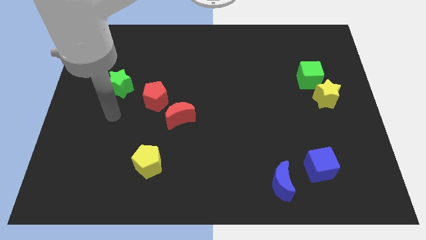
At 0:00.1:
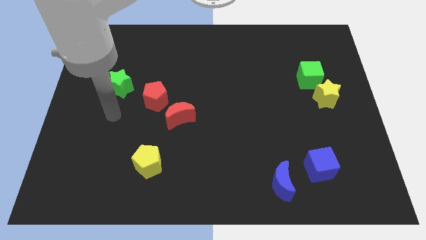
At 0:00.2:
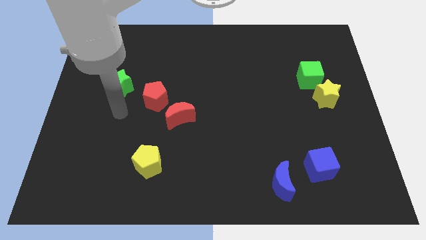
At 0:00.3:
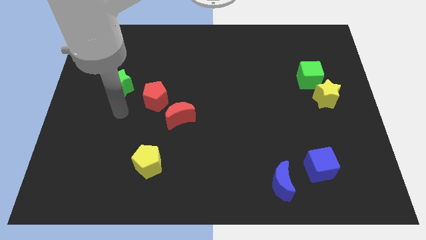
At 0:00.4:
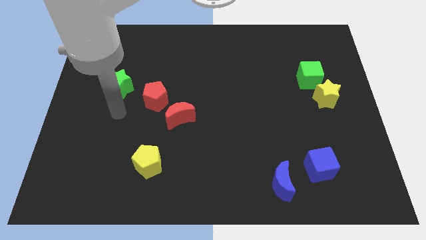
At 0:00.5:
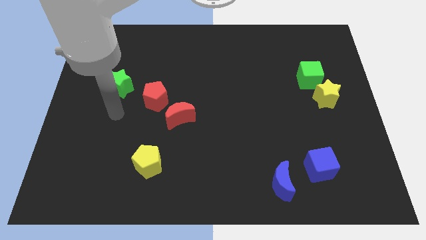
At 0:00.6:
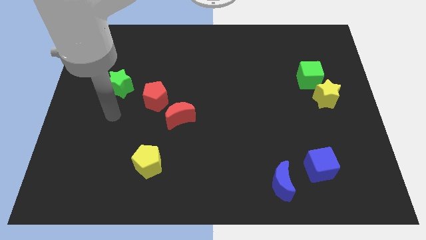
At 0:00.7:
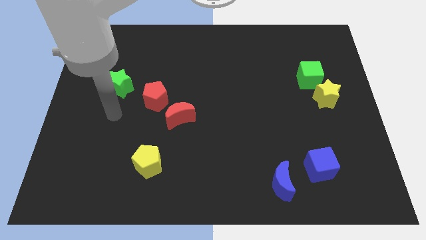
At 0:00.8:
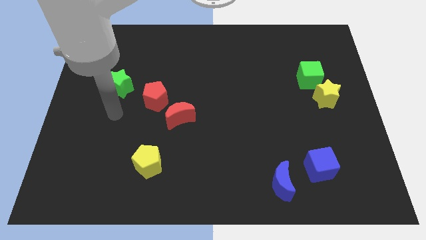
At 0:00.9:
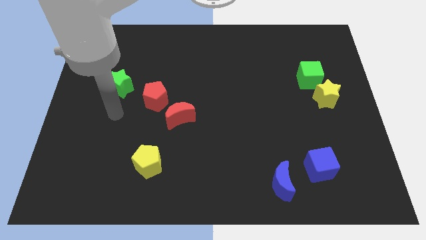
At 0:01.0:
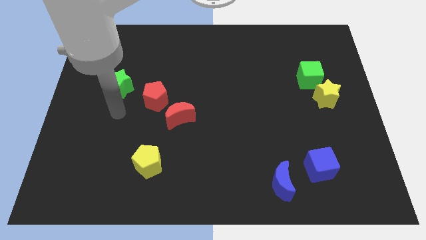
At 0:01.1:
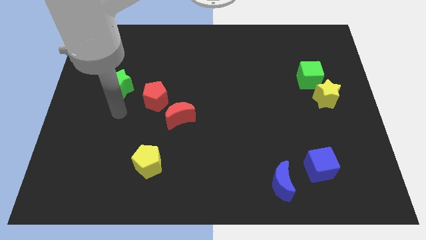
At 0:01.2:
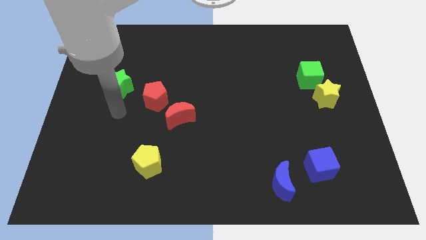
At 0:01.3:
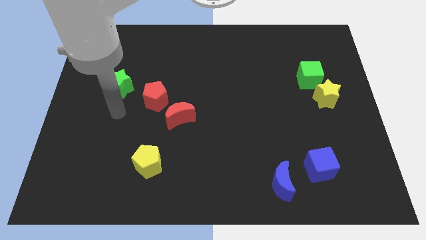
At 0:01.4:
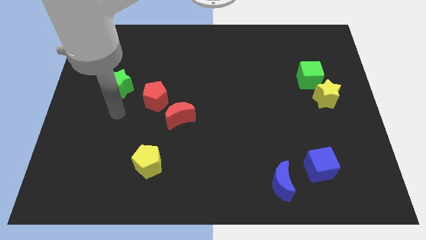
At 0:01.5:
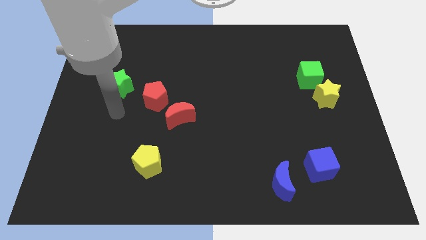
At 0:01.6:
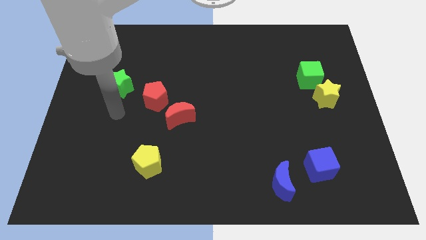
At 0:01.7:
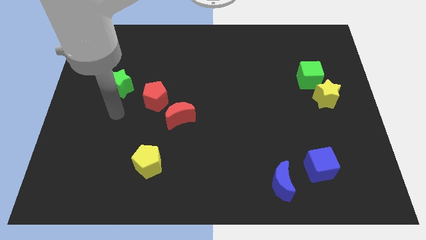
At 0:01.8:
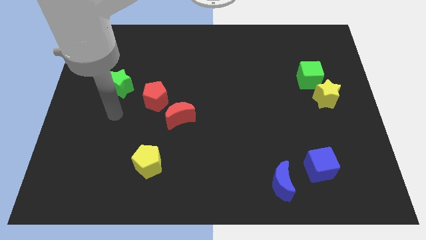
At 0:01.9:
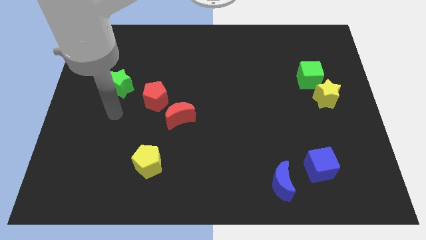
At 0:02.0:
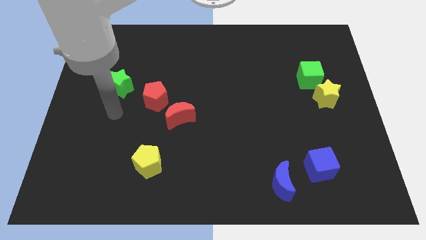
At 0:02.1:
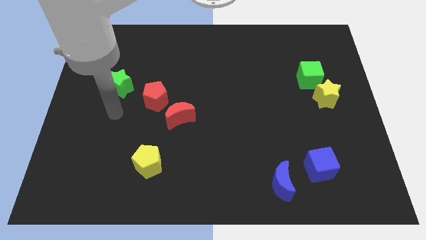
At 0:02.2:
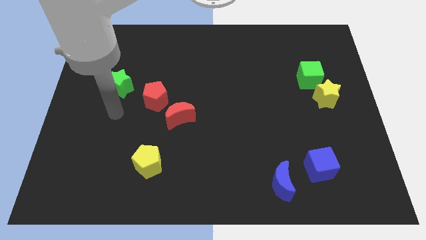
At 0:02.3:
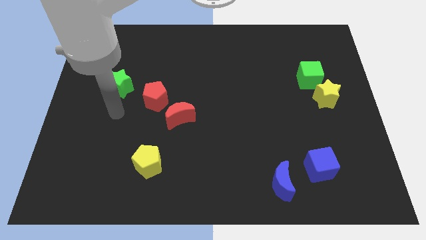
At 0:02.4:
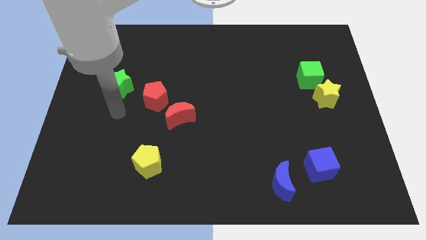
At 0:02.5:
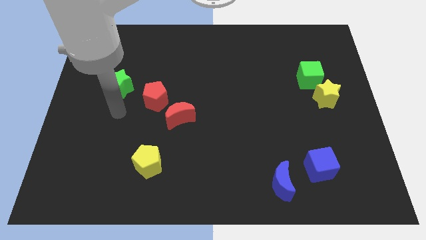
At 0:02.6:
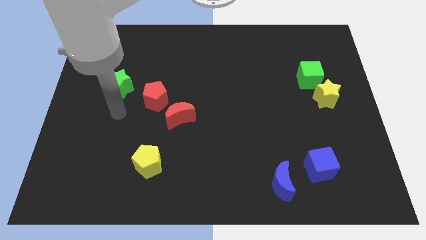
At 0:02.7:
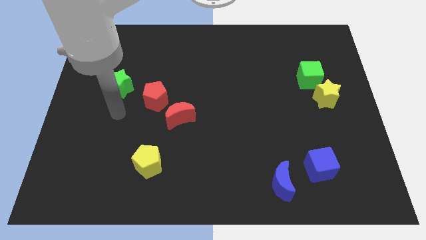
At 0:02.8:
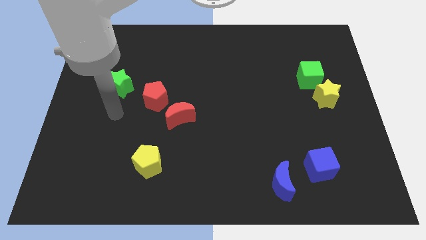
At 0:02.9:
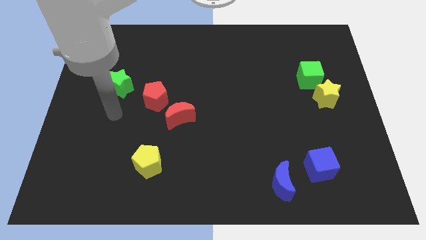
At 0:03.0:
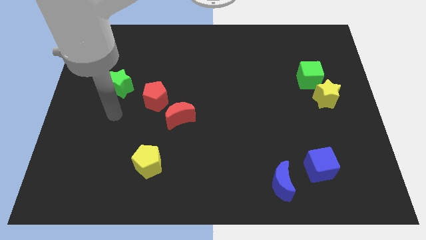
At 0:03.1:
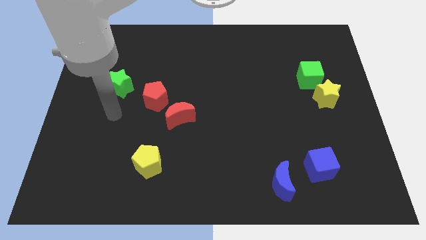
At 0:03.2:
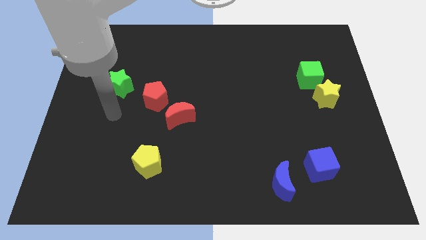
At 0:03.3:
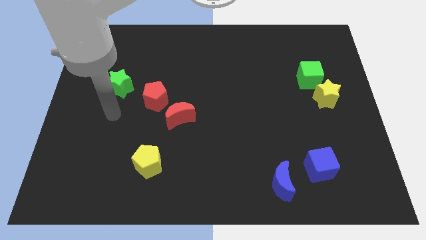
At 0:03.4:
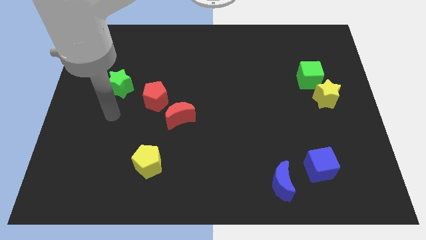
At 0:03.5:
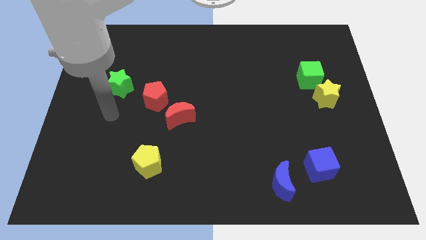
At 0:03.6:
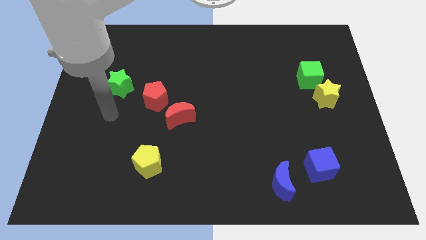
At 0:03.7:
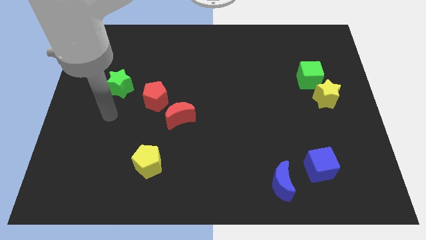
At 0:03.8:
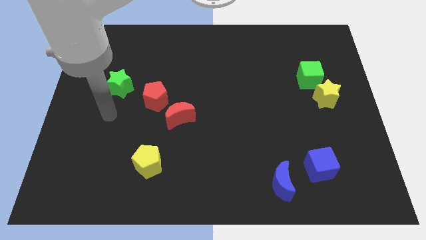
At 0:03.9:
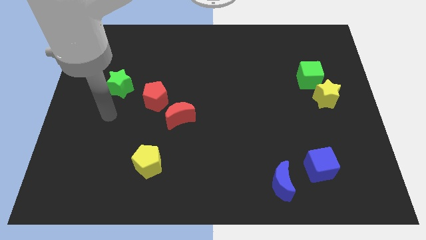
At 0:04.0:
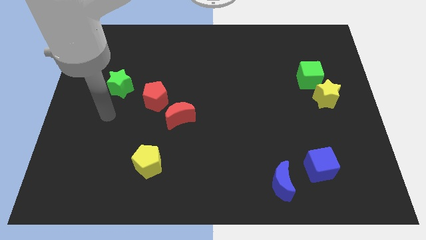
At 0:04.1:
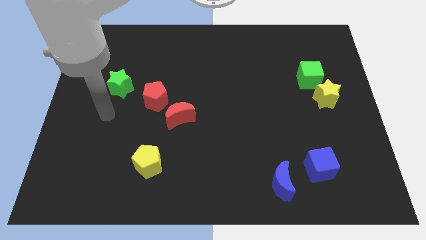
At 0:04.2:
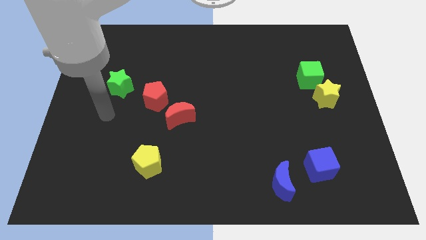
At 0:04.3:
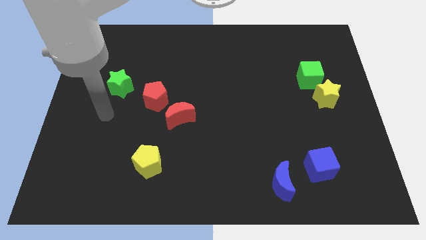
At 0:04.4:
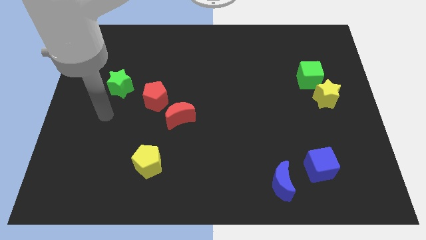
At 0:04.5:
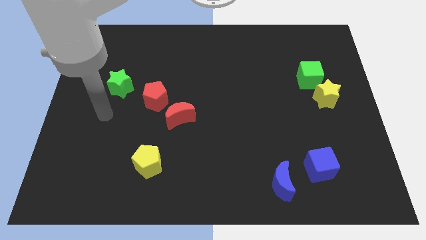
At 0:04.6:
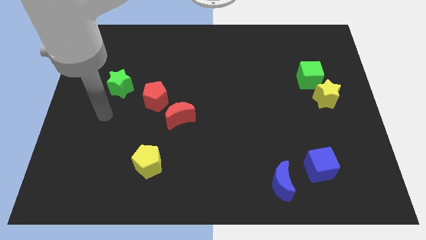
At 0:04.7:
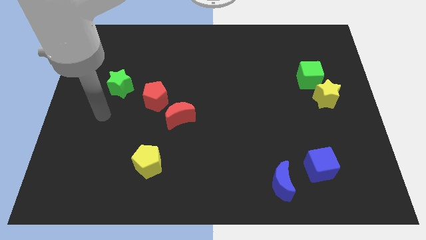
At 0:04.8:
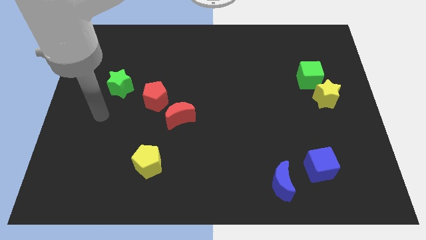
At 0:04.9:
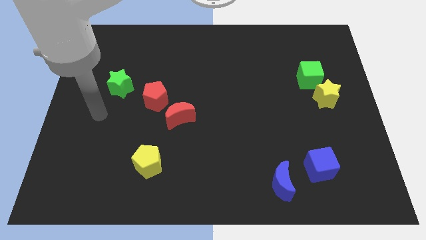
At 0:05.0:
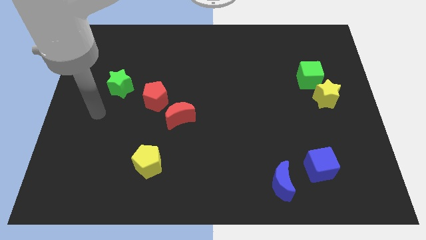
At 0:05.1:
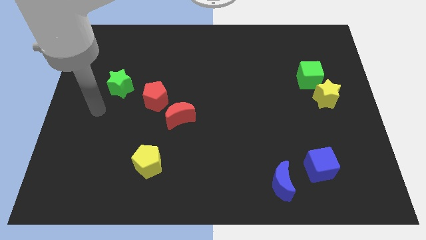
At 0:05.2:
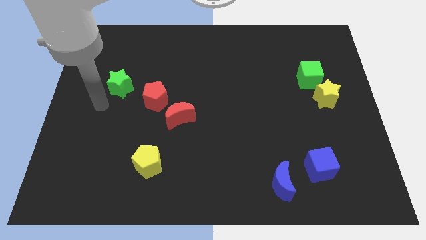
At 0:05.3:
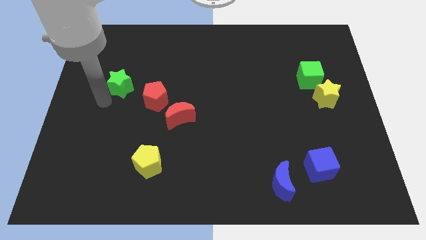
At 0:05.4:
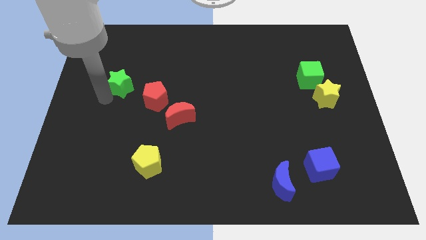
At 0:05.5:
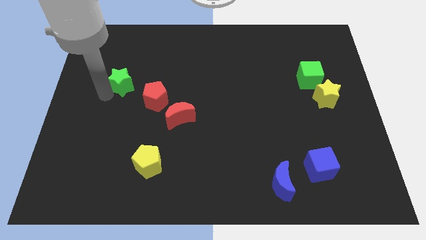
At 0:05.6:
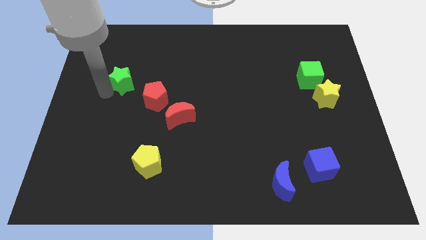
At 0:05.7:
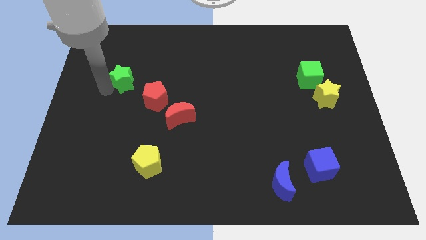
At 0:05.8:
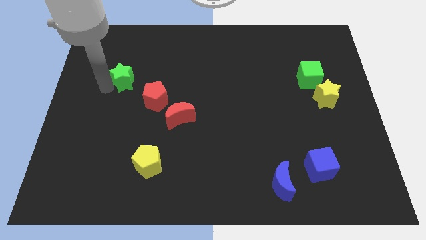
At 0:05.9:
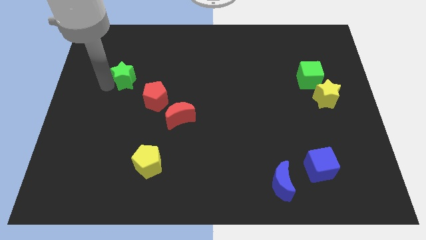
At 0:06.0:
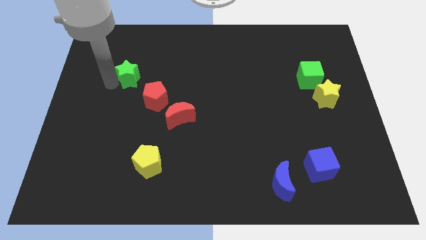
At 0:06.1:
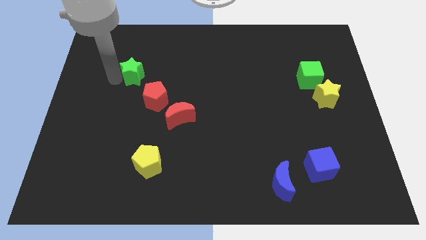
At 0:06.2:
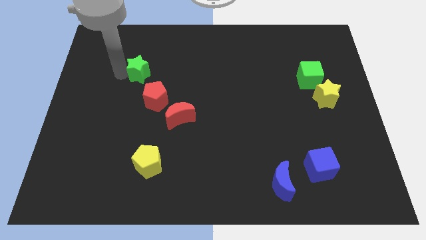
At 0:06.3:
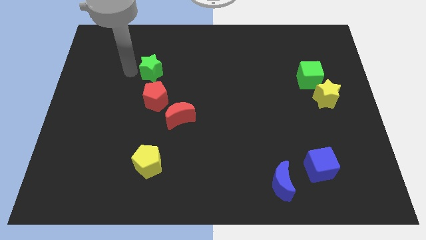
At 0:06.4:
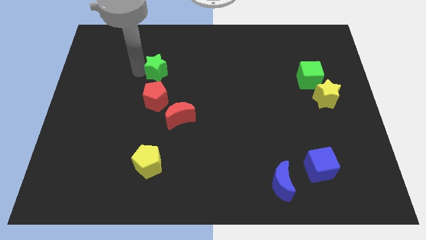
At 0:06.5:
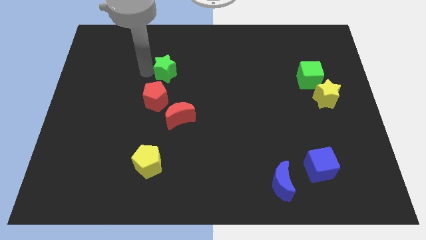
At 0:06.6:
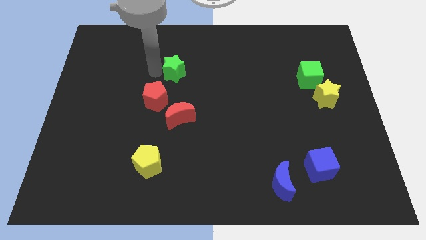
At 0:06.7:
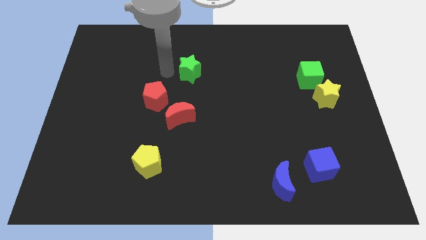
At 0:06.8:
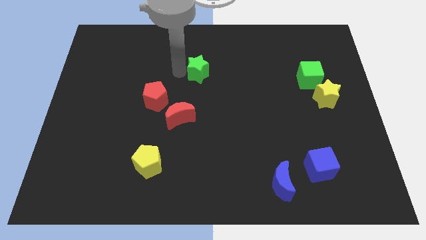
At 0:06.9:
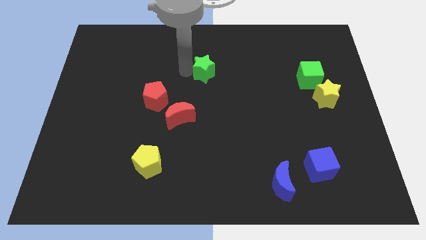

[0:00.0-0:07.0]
move the green star to the center

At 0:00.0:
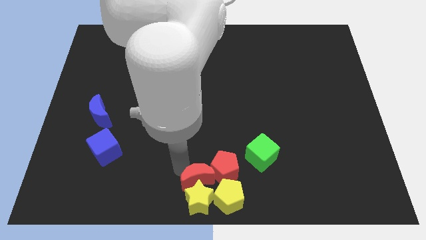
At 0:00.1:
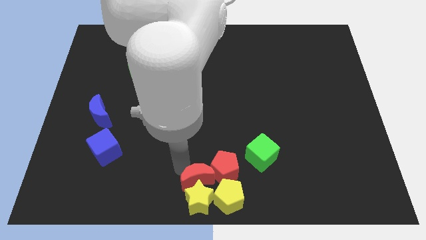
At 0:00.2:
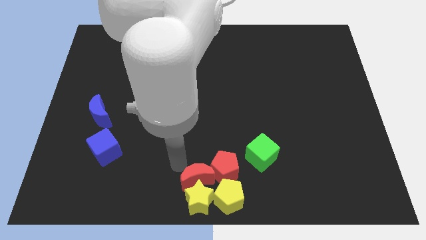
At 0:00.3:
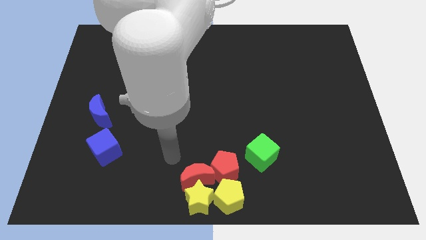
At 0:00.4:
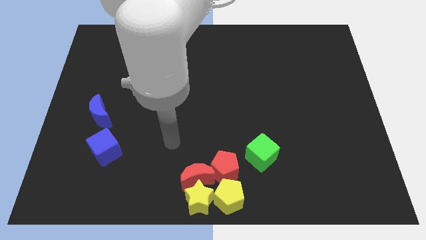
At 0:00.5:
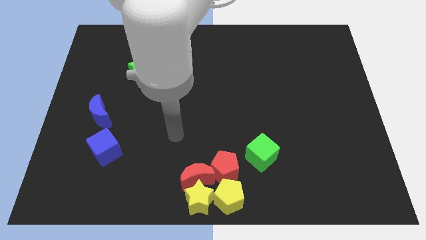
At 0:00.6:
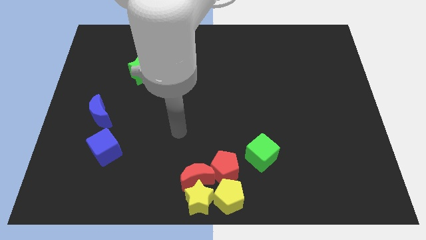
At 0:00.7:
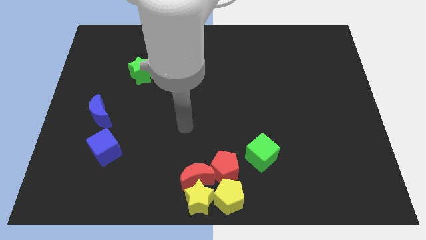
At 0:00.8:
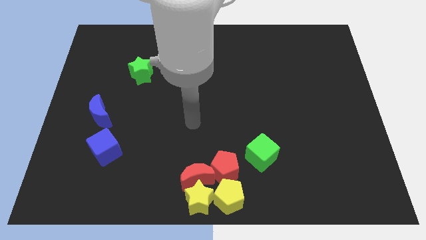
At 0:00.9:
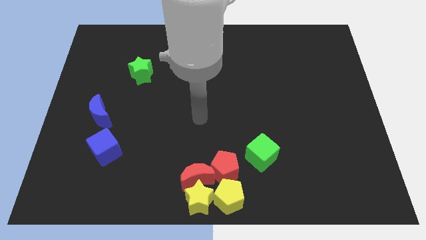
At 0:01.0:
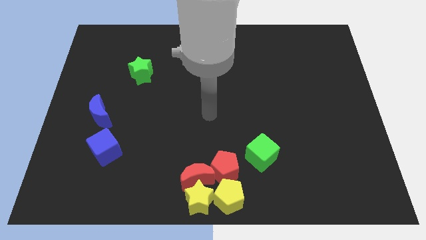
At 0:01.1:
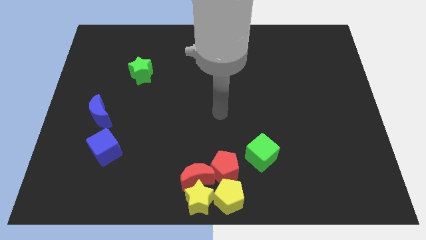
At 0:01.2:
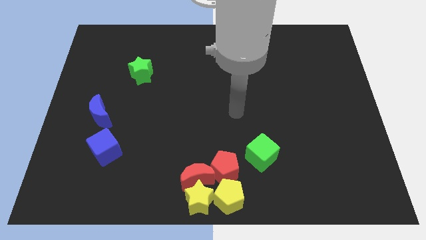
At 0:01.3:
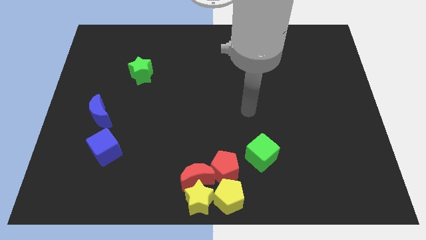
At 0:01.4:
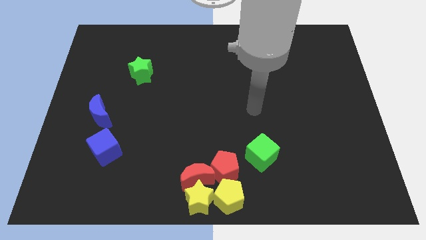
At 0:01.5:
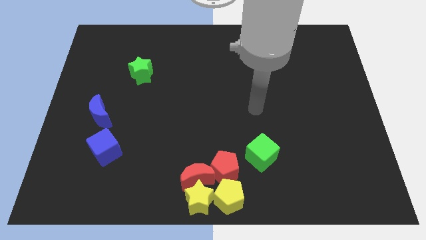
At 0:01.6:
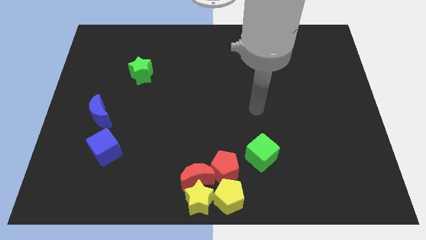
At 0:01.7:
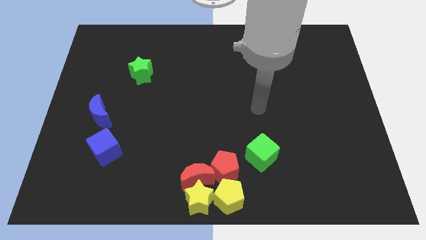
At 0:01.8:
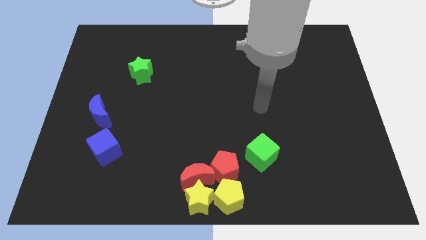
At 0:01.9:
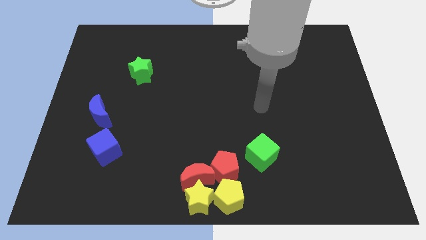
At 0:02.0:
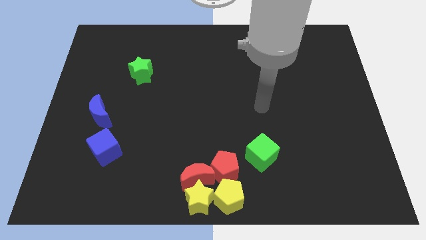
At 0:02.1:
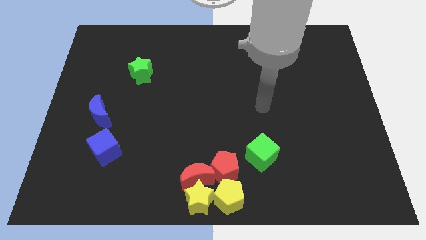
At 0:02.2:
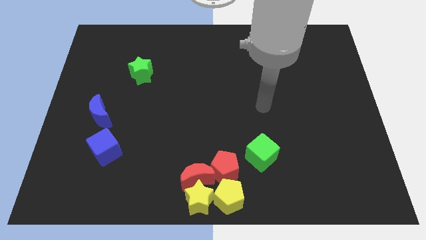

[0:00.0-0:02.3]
move the arm vertically above the green cube
